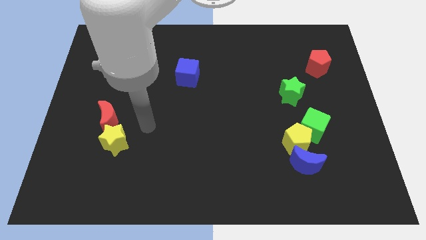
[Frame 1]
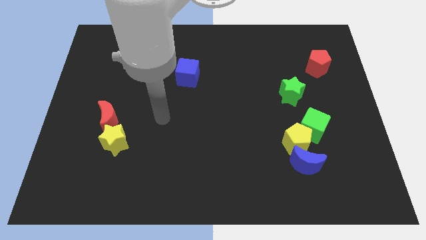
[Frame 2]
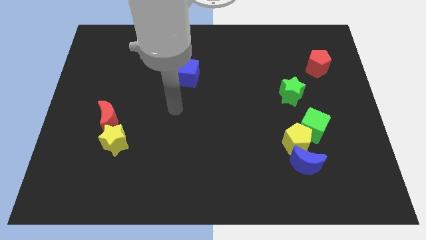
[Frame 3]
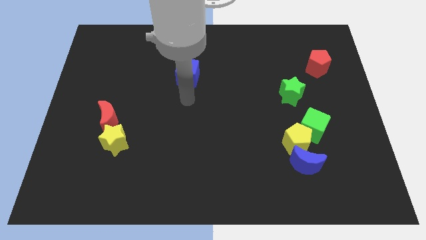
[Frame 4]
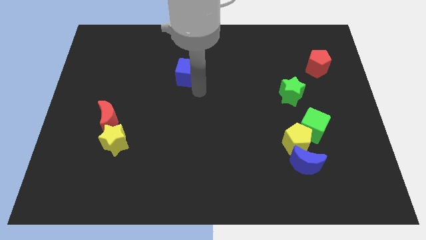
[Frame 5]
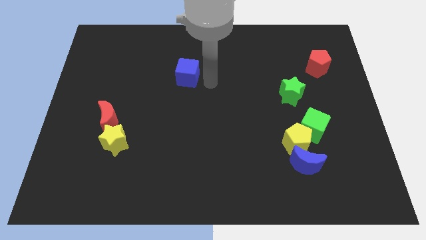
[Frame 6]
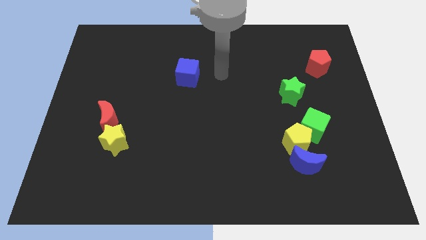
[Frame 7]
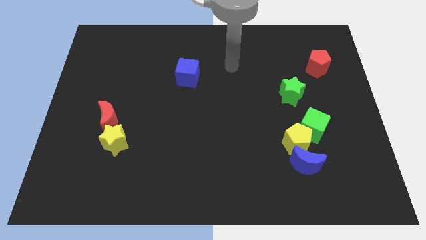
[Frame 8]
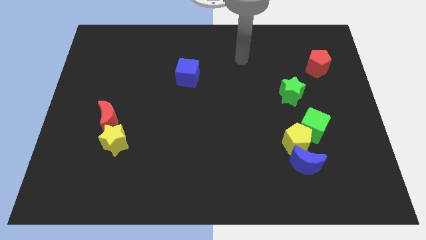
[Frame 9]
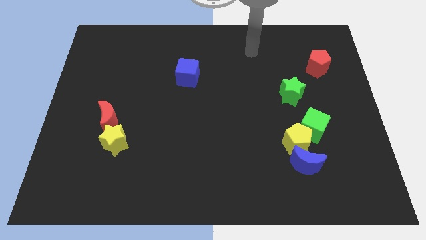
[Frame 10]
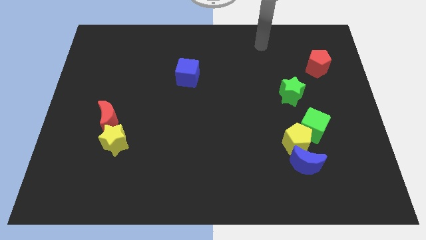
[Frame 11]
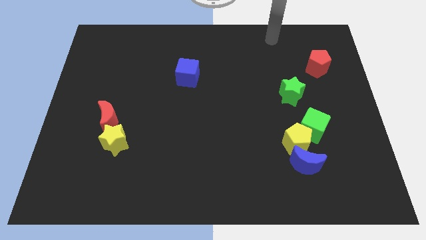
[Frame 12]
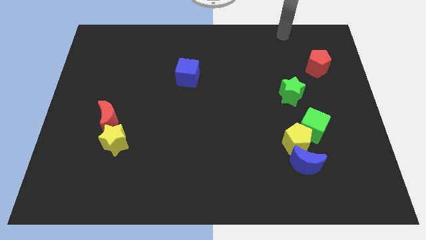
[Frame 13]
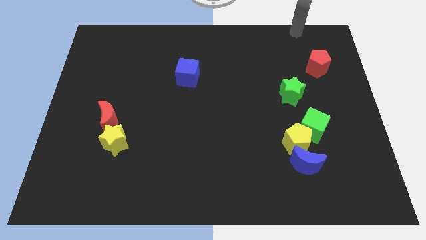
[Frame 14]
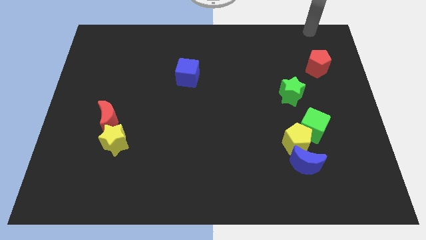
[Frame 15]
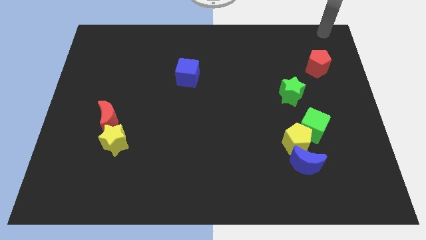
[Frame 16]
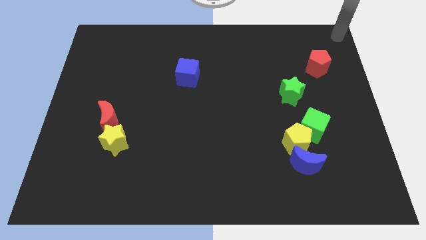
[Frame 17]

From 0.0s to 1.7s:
move your arm towards the top left corner of the board

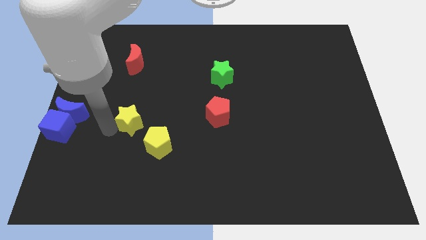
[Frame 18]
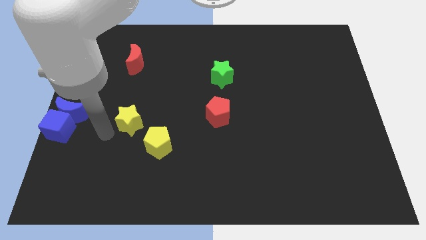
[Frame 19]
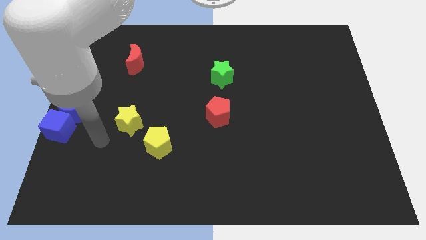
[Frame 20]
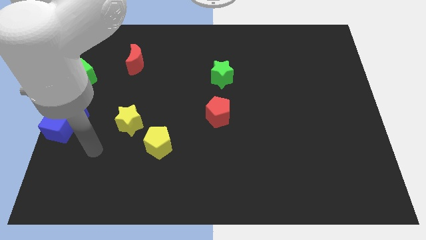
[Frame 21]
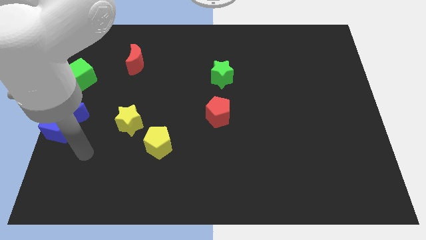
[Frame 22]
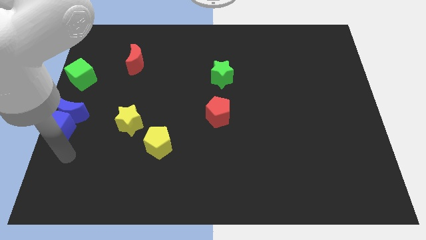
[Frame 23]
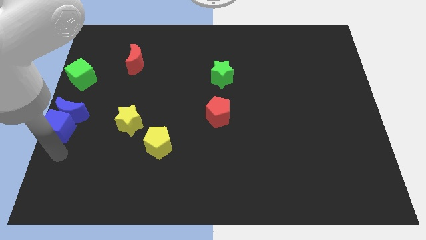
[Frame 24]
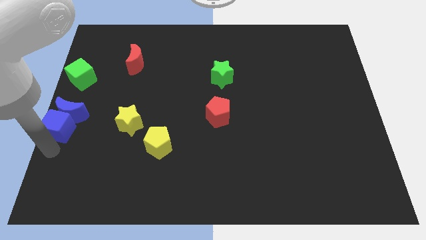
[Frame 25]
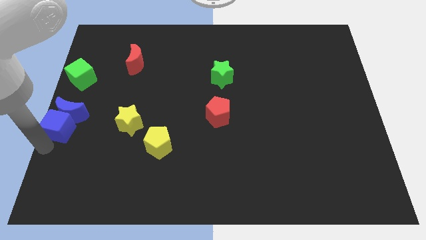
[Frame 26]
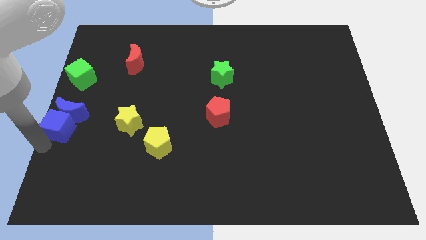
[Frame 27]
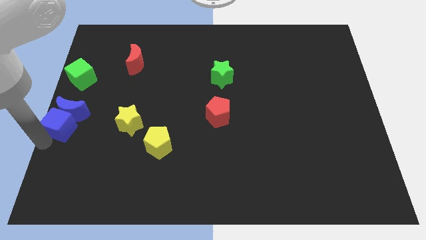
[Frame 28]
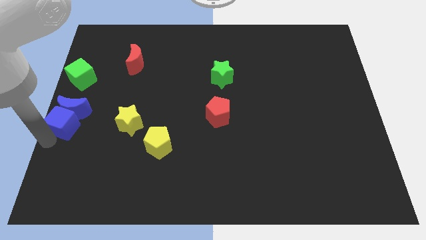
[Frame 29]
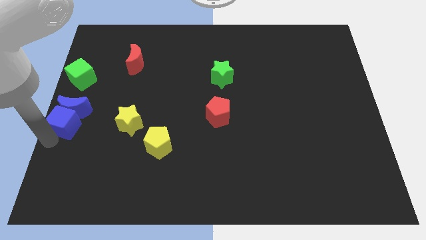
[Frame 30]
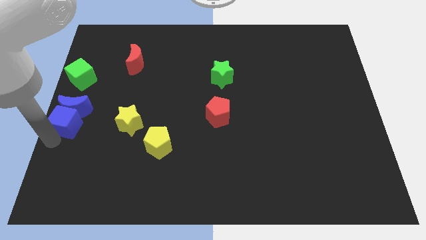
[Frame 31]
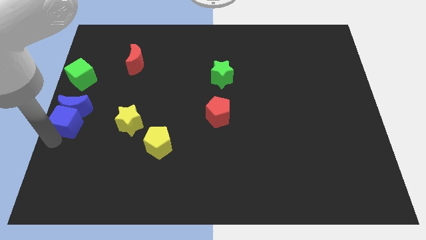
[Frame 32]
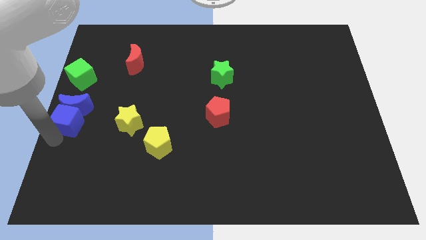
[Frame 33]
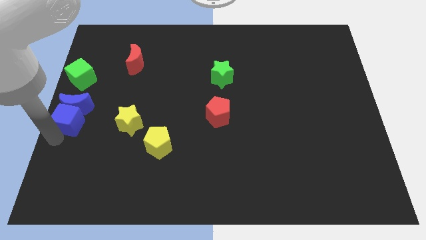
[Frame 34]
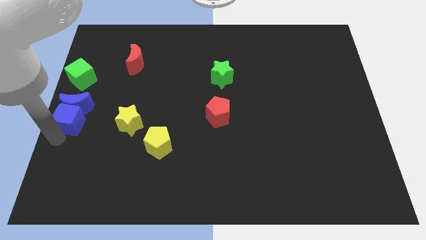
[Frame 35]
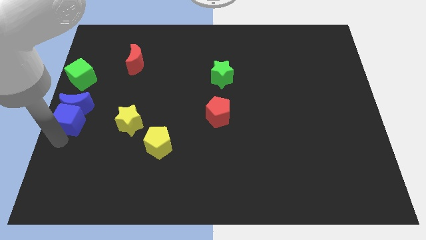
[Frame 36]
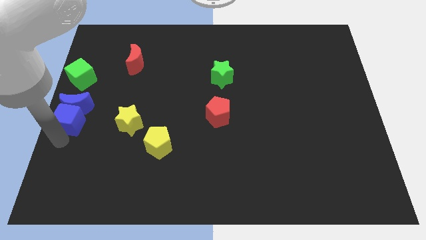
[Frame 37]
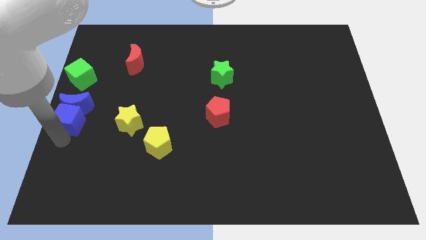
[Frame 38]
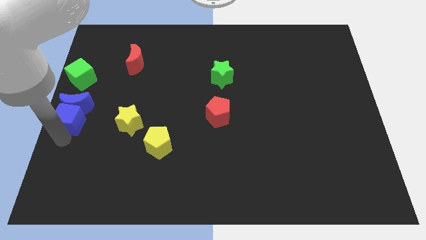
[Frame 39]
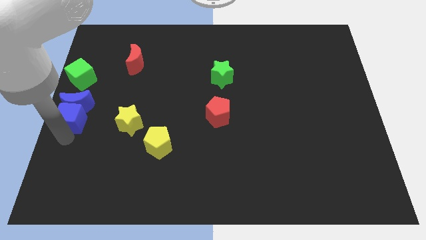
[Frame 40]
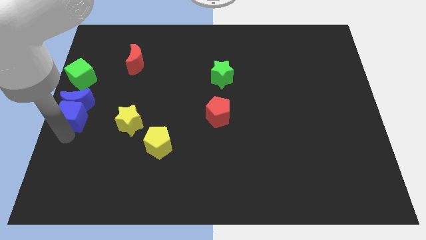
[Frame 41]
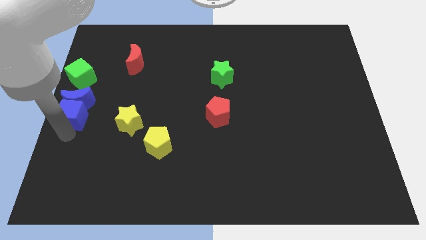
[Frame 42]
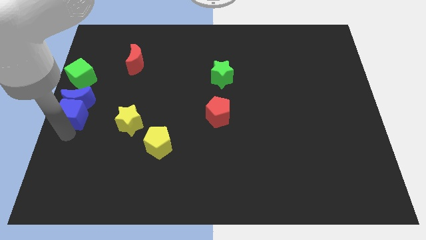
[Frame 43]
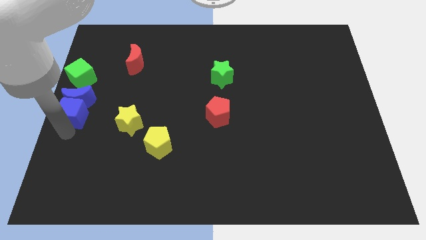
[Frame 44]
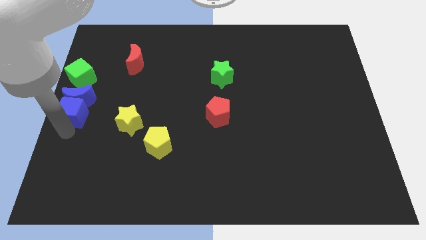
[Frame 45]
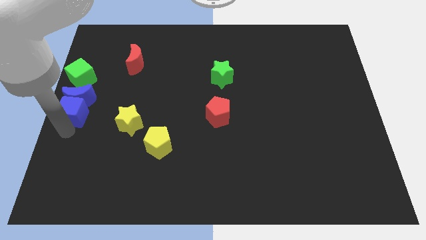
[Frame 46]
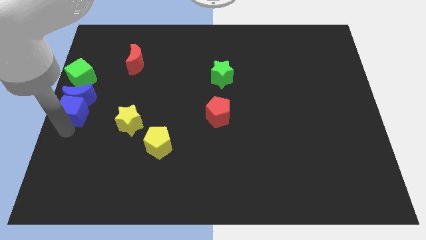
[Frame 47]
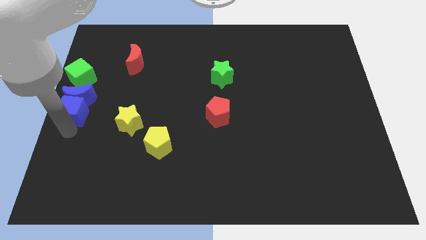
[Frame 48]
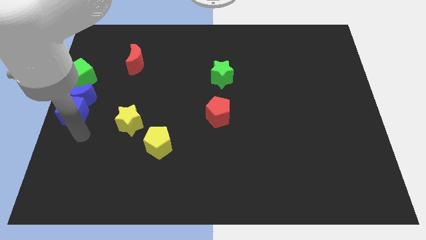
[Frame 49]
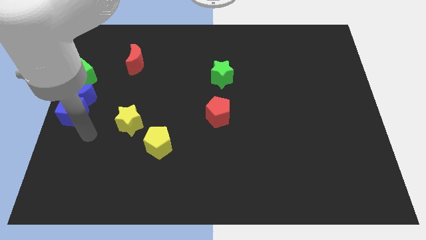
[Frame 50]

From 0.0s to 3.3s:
move the blue blocks into the green cube

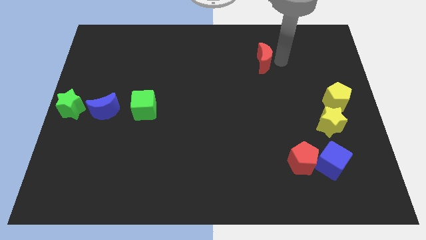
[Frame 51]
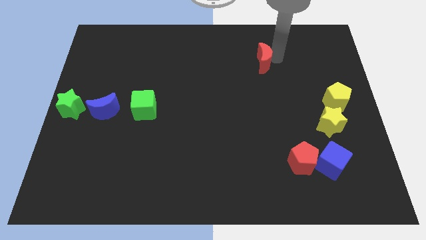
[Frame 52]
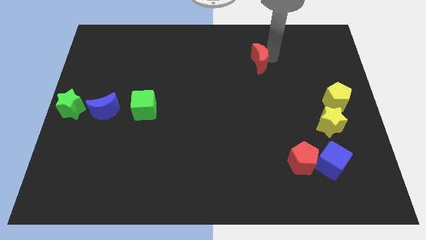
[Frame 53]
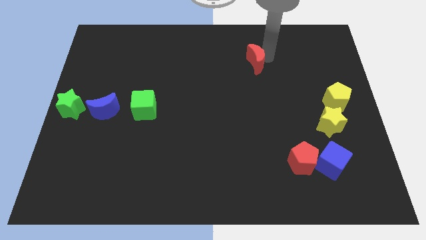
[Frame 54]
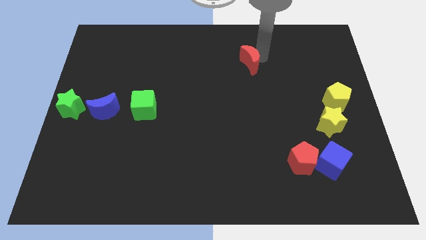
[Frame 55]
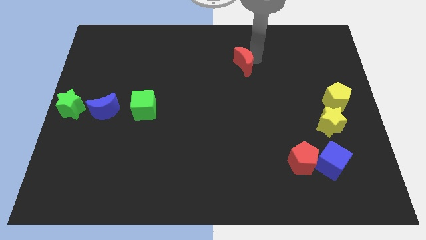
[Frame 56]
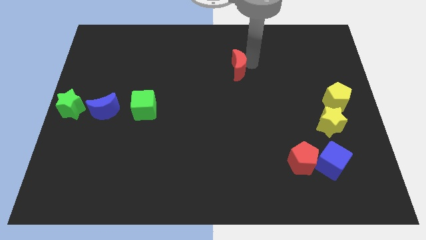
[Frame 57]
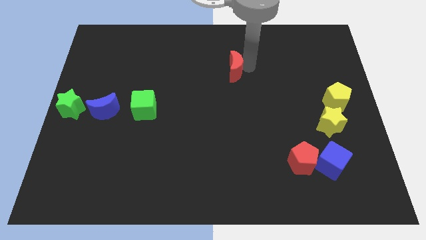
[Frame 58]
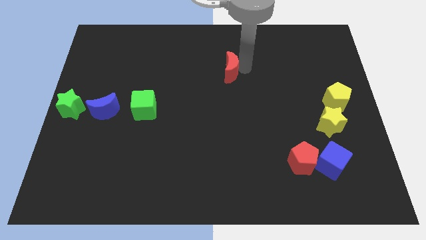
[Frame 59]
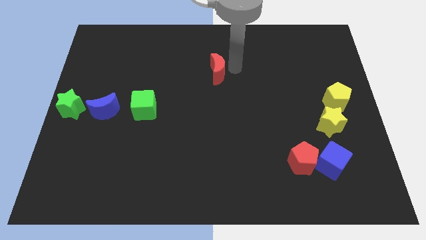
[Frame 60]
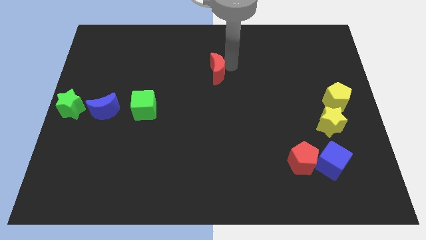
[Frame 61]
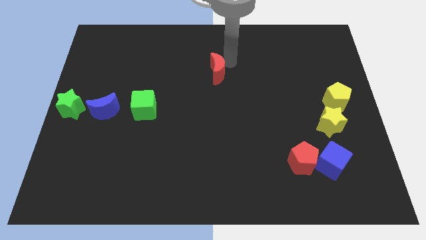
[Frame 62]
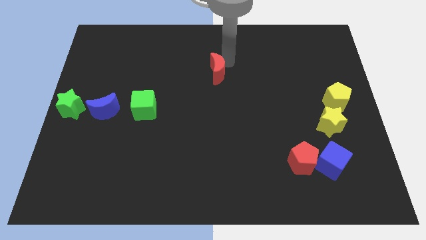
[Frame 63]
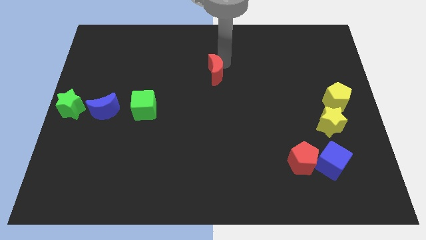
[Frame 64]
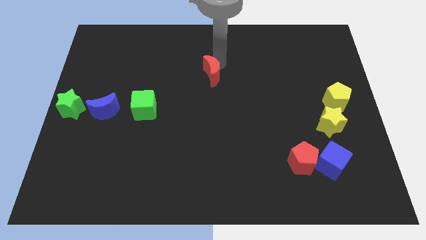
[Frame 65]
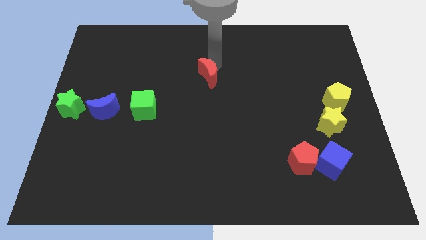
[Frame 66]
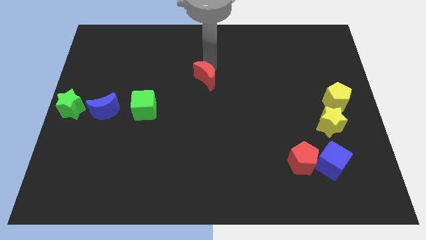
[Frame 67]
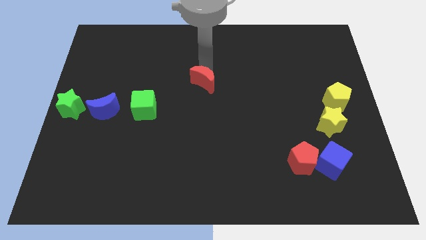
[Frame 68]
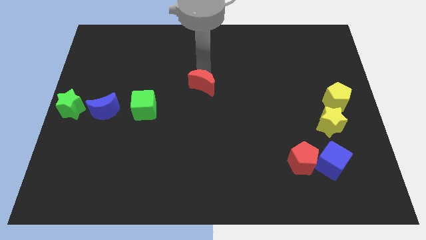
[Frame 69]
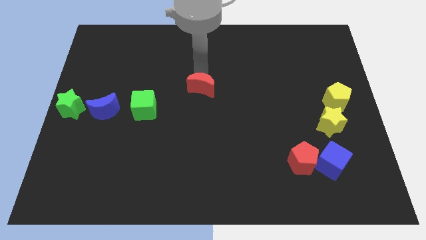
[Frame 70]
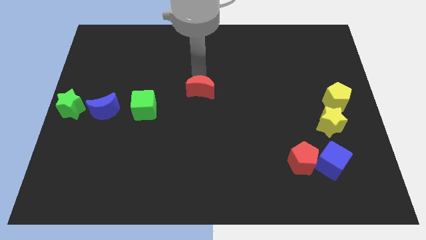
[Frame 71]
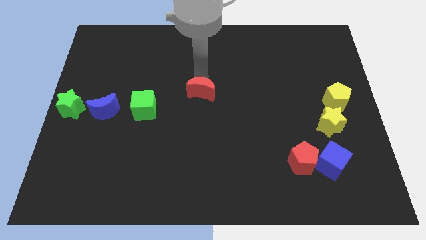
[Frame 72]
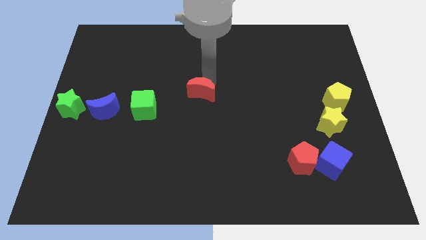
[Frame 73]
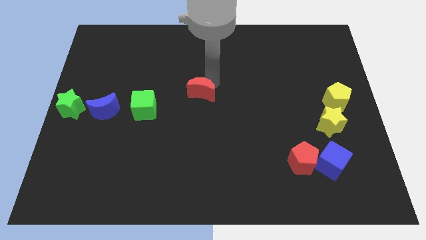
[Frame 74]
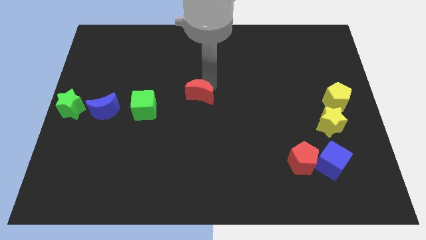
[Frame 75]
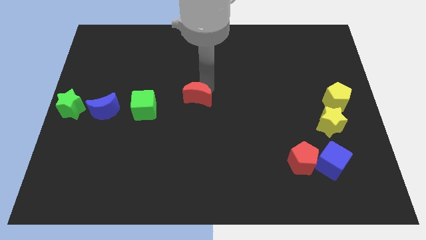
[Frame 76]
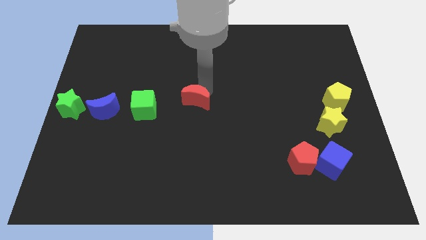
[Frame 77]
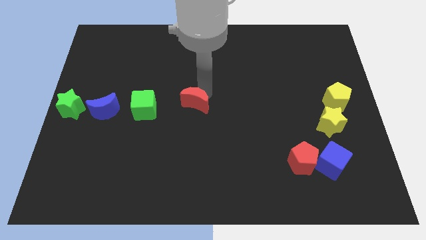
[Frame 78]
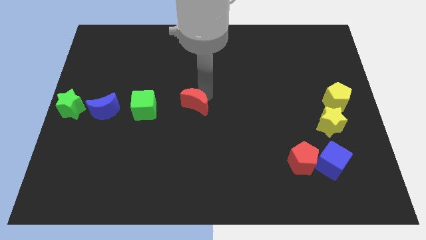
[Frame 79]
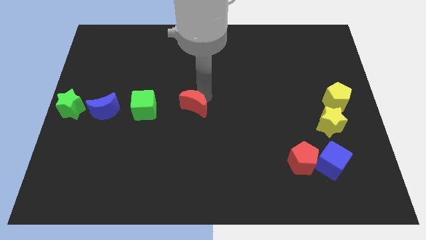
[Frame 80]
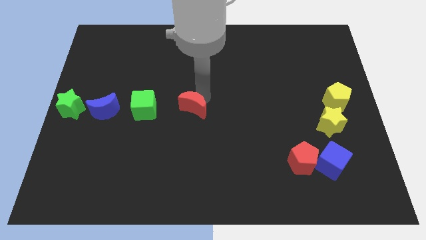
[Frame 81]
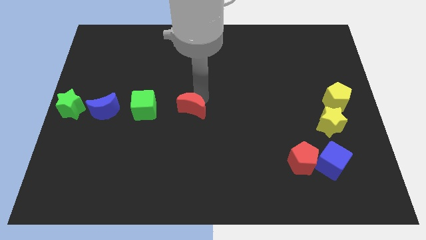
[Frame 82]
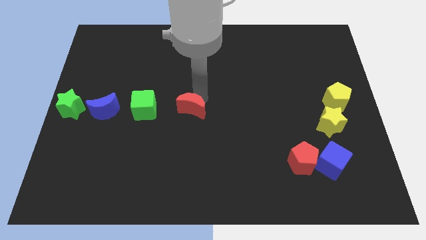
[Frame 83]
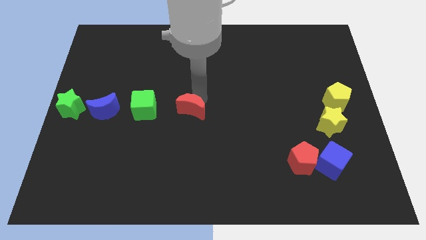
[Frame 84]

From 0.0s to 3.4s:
move the red moon to the right of the green cube

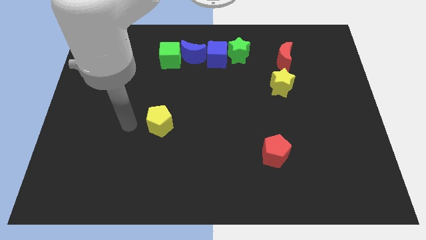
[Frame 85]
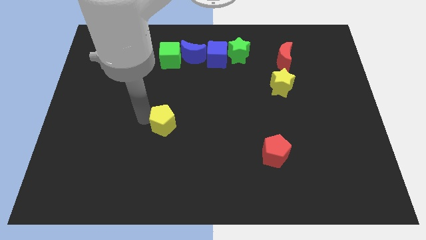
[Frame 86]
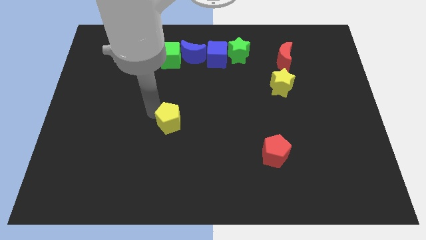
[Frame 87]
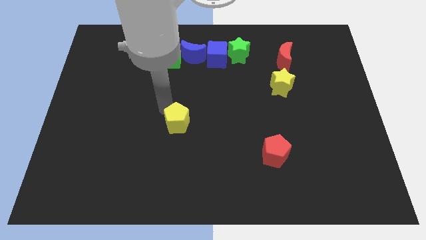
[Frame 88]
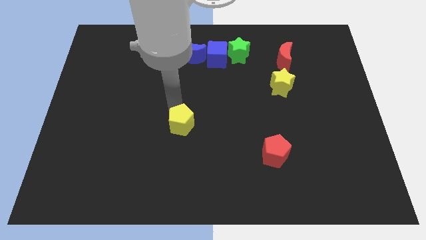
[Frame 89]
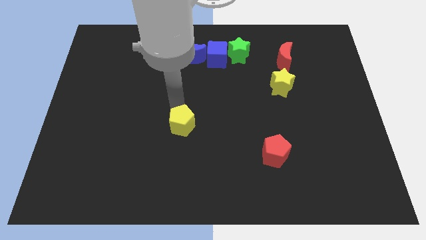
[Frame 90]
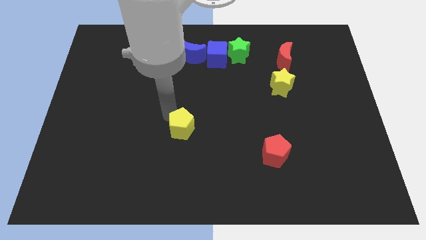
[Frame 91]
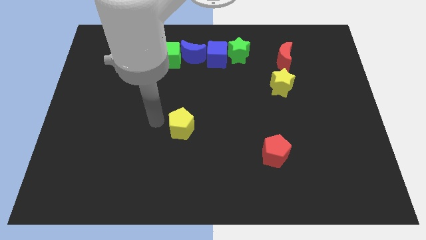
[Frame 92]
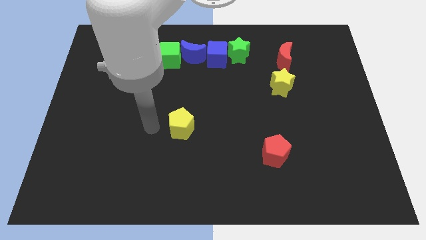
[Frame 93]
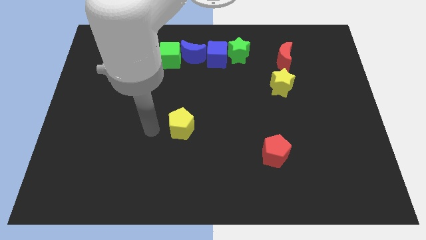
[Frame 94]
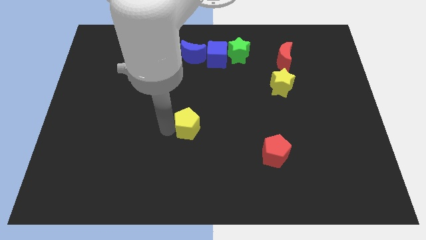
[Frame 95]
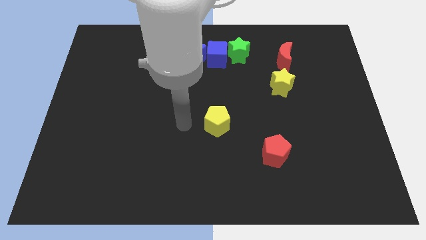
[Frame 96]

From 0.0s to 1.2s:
move the yellow pentagon to the center of the board
